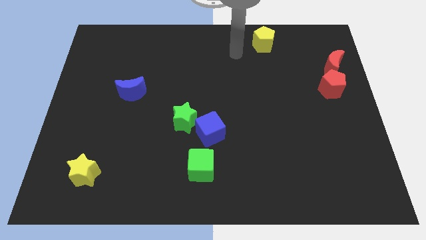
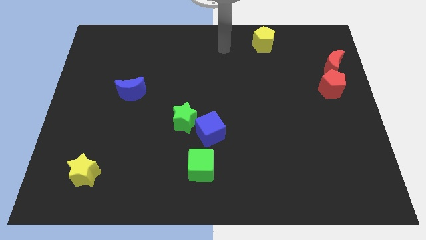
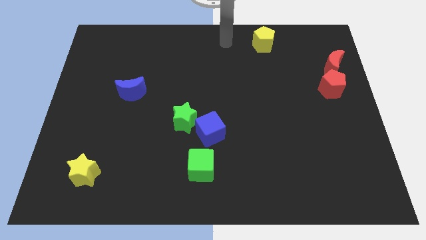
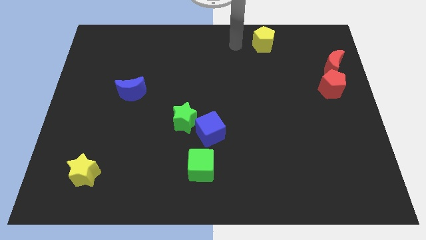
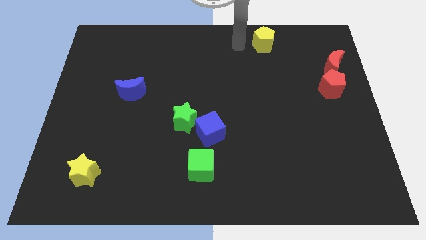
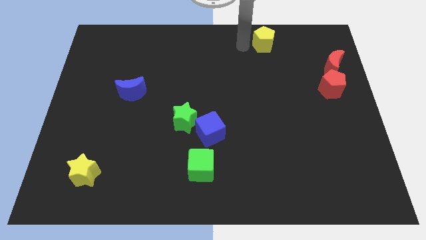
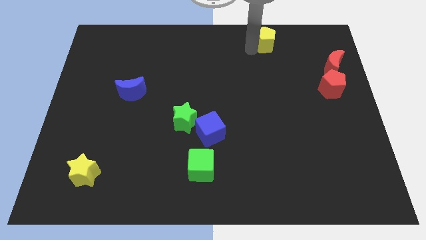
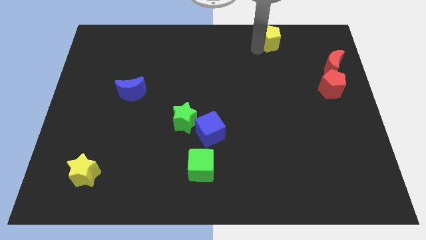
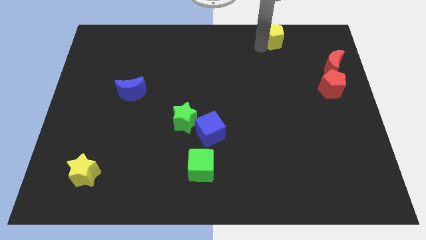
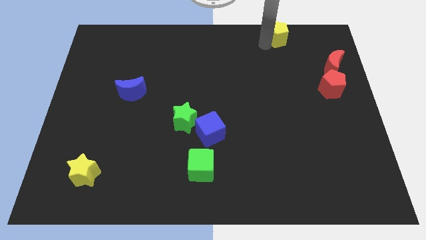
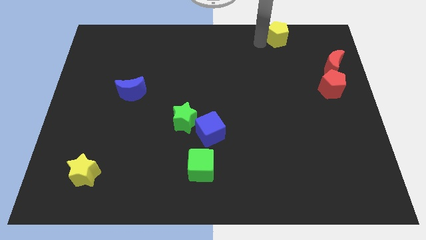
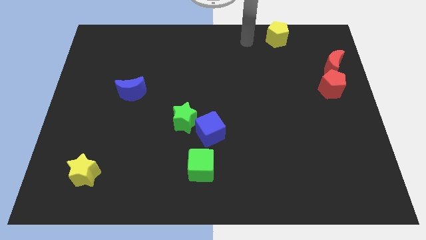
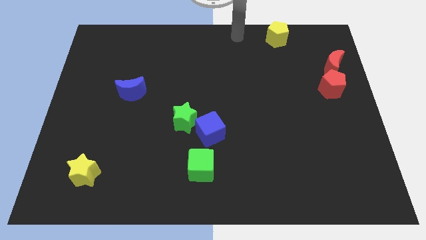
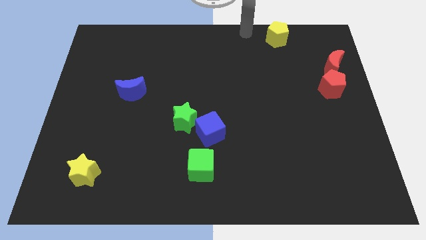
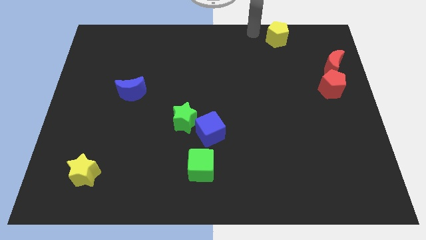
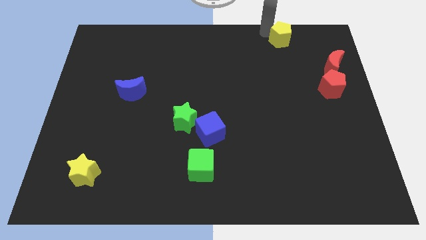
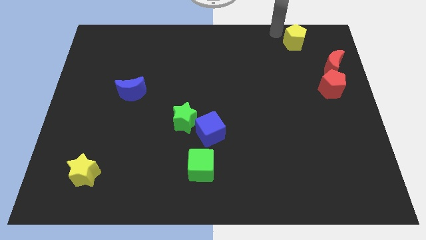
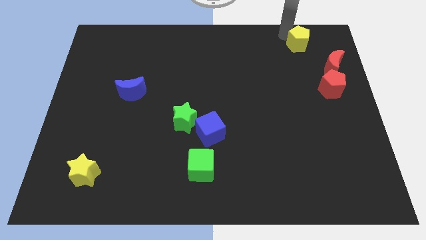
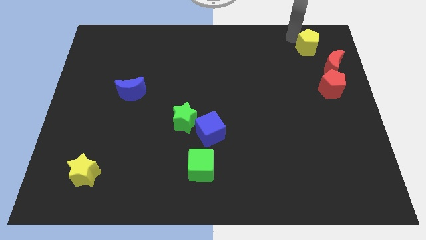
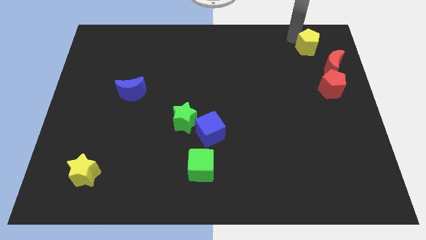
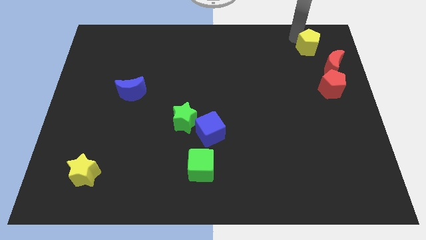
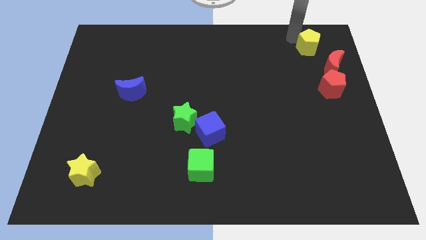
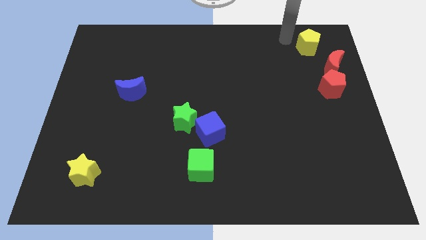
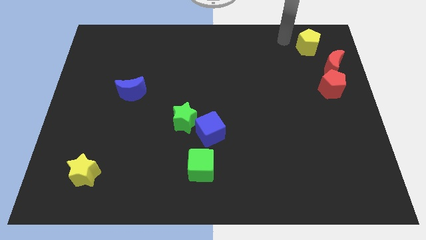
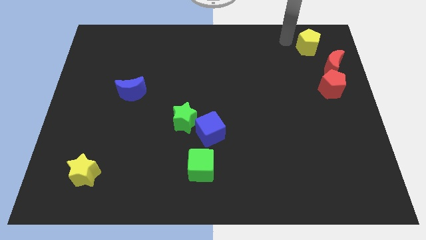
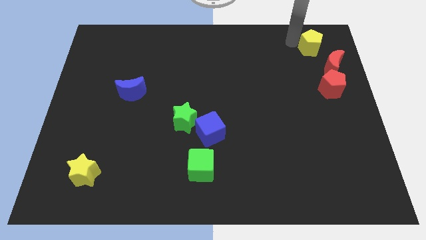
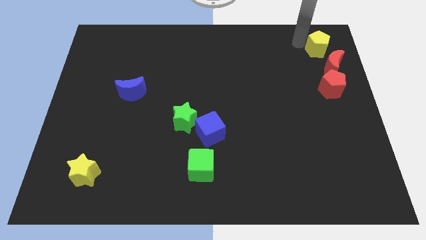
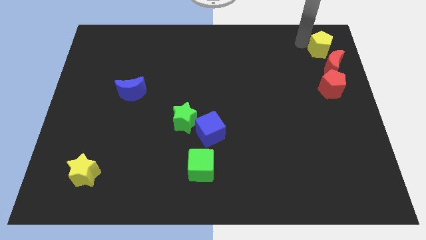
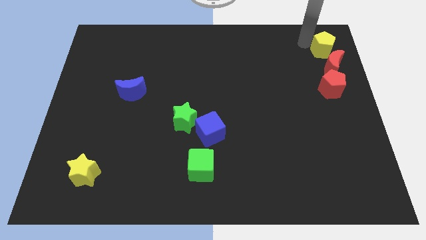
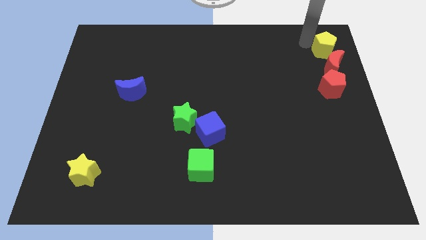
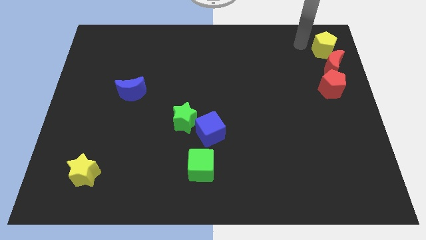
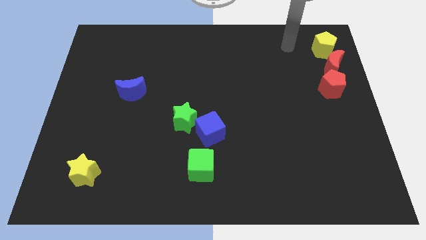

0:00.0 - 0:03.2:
move yellow pentagon to the top right

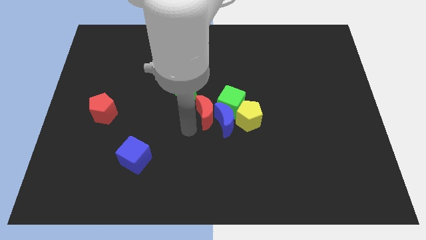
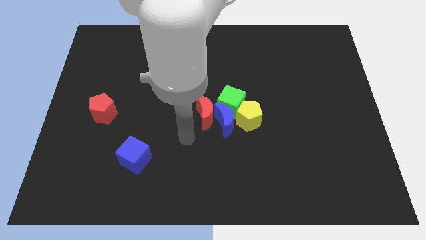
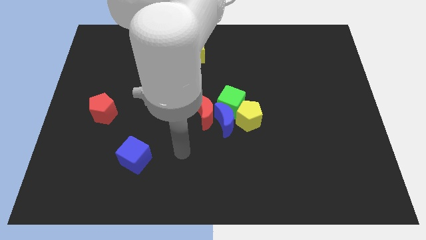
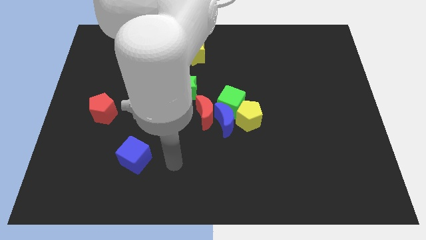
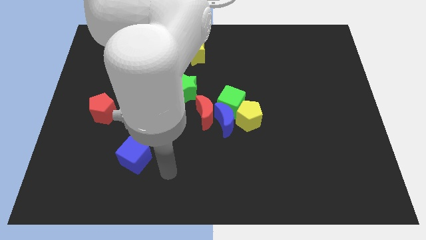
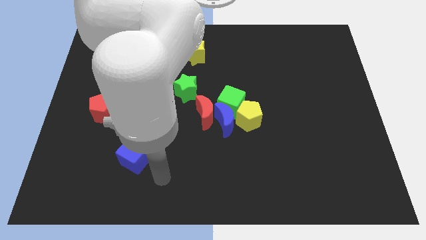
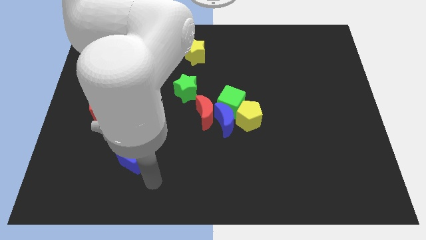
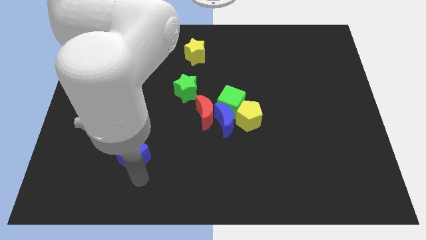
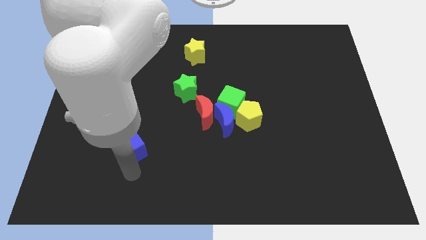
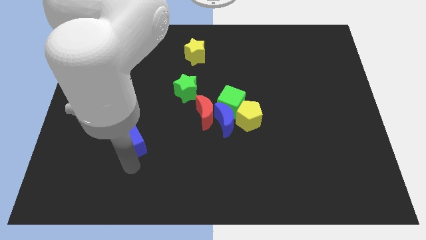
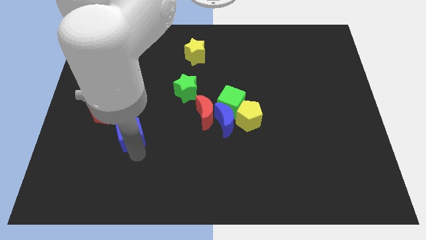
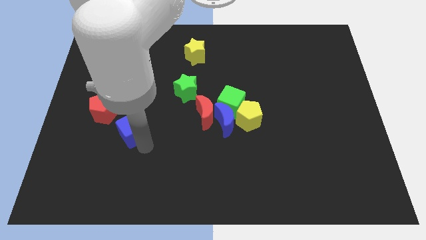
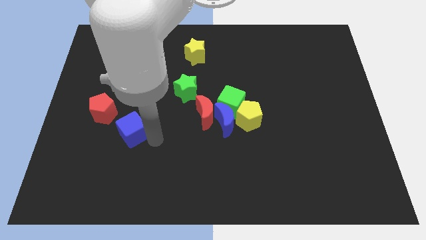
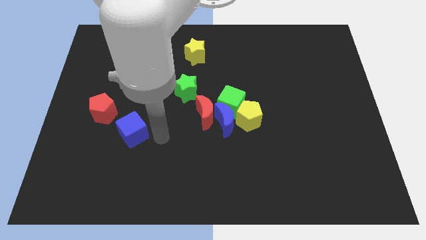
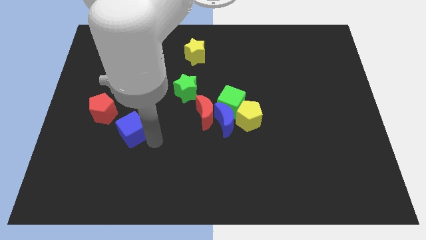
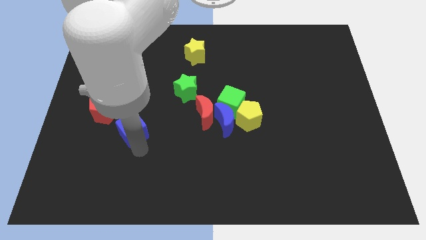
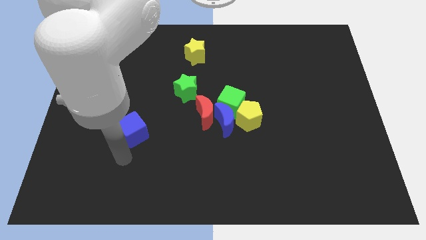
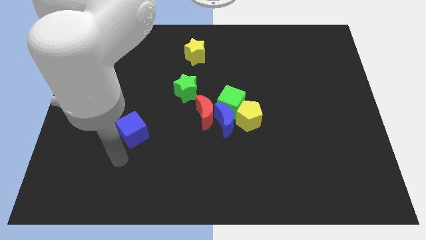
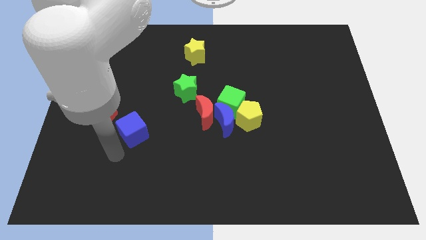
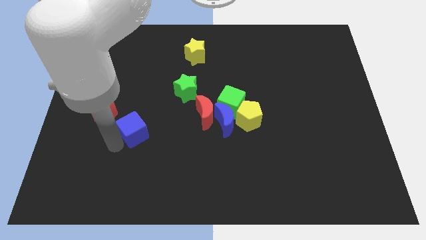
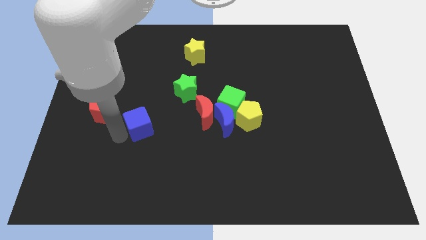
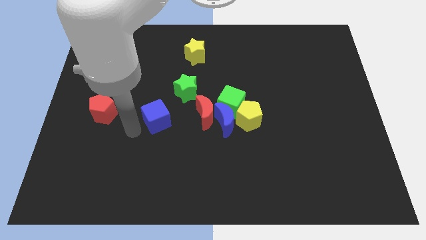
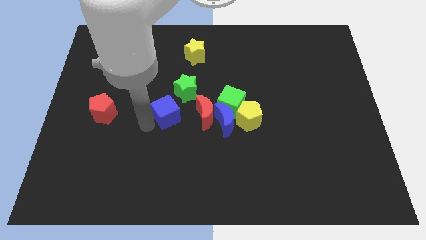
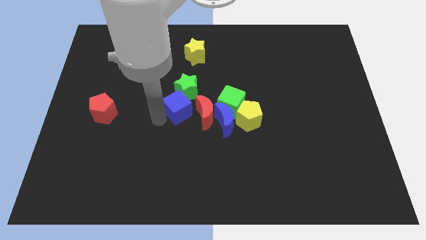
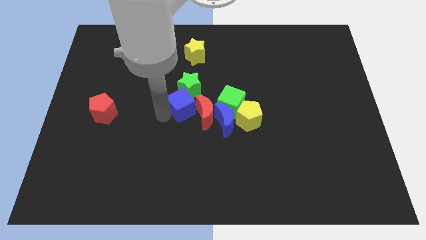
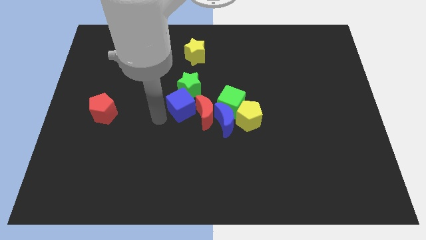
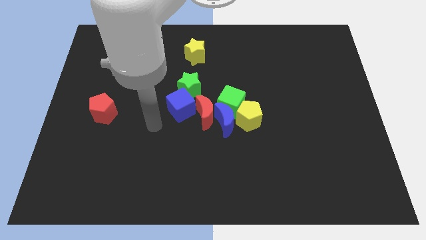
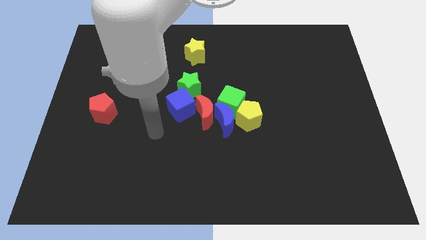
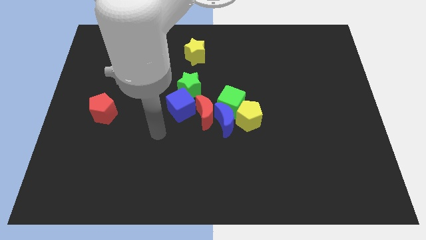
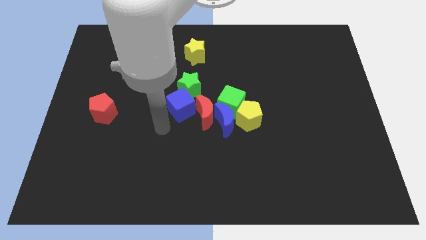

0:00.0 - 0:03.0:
push blue cube to the bottom of green star

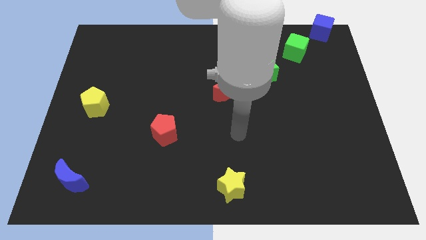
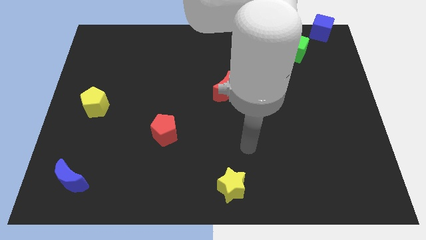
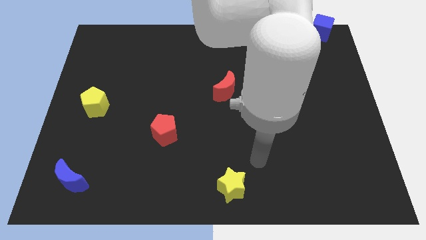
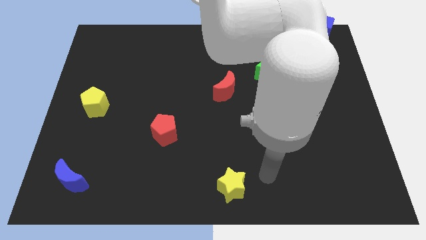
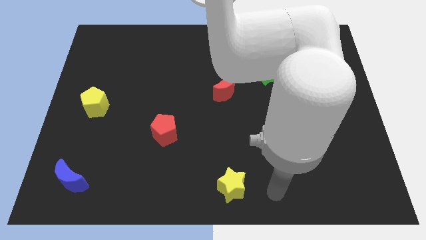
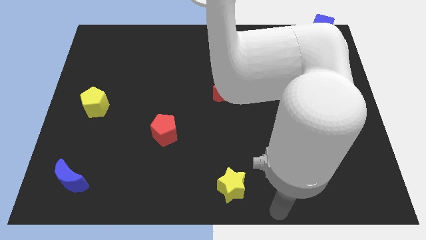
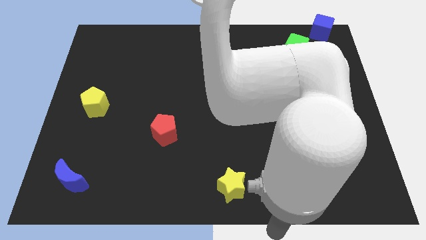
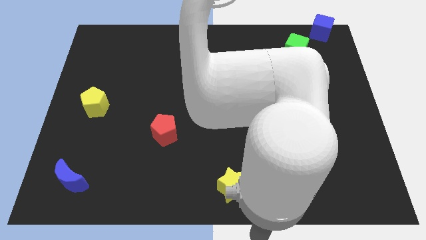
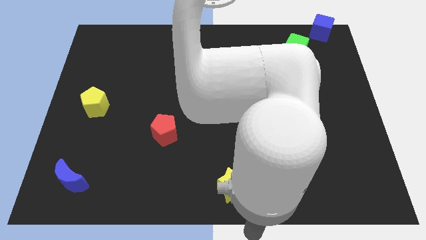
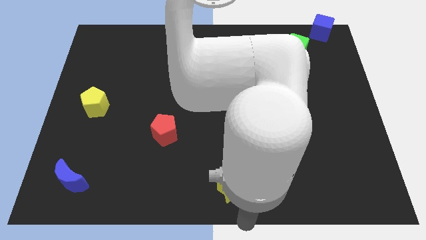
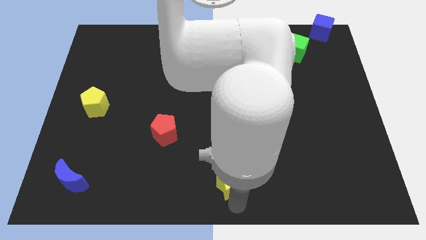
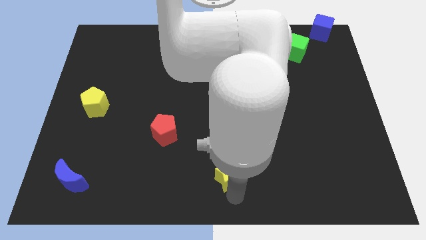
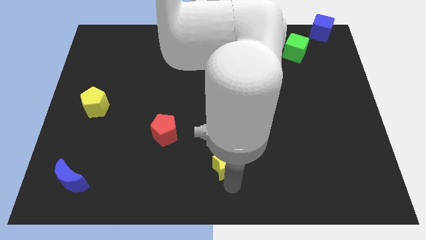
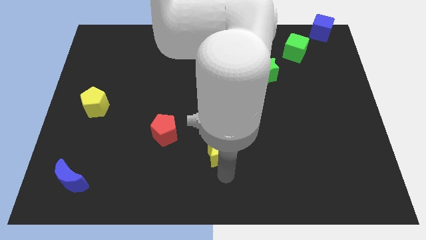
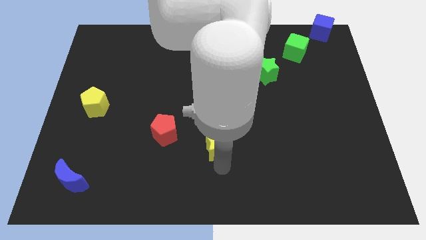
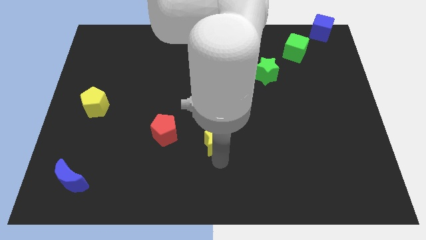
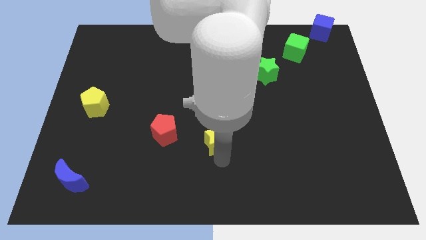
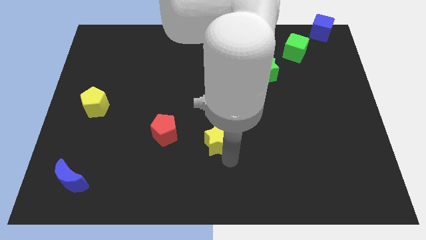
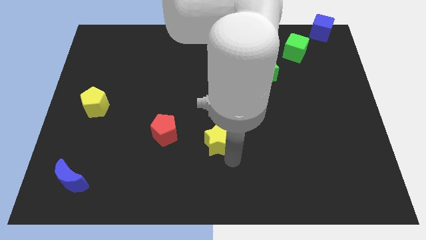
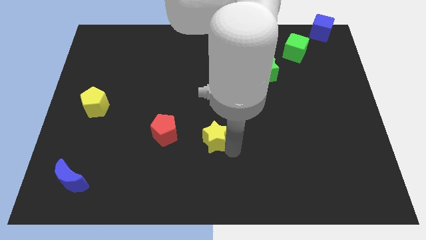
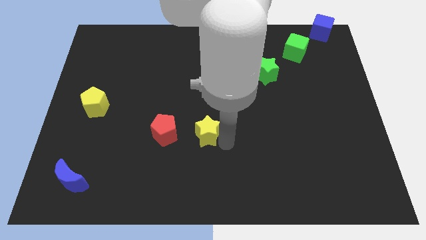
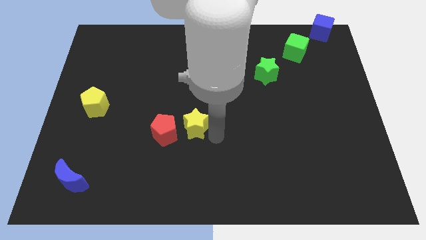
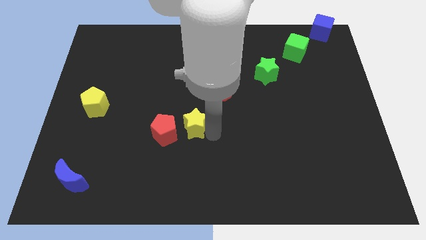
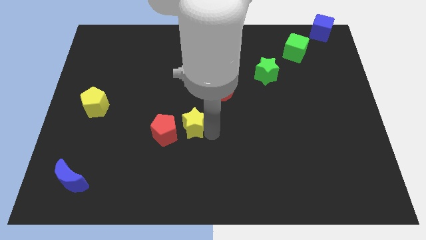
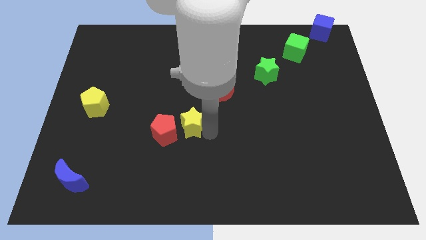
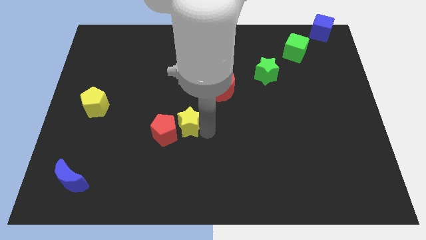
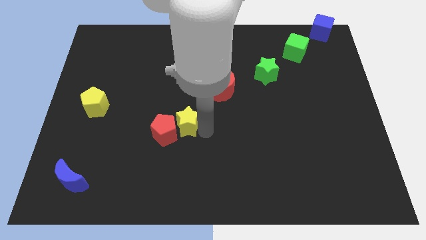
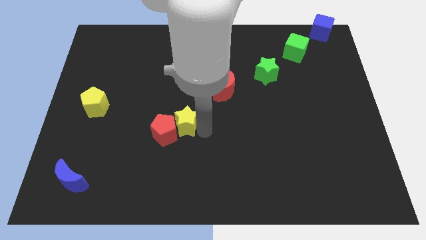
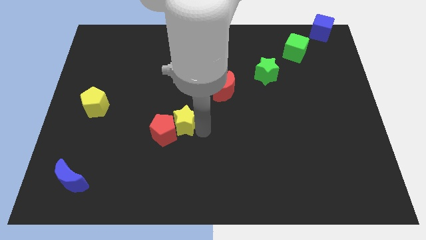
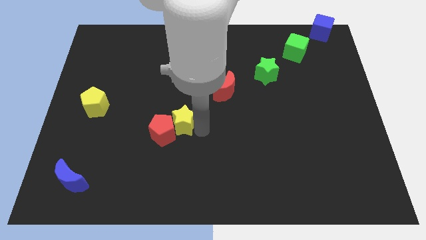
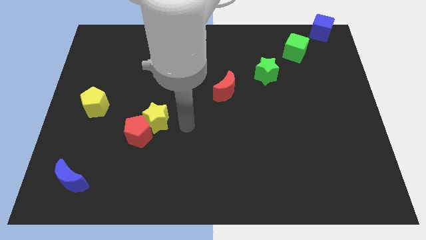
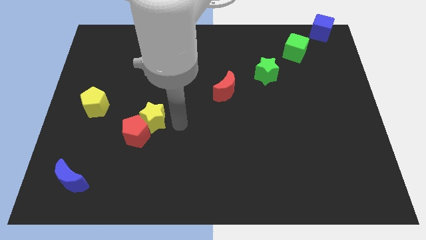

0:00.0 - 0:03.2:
push the yellow star into red pentagon
